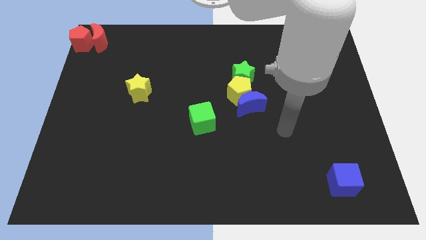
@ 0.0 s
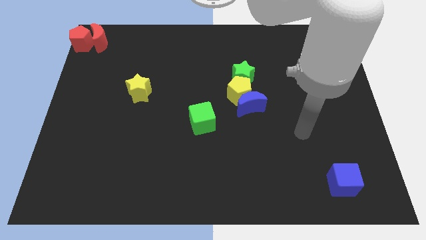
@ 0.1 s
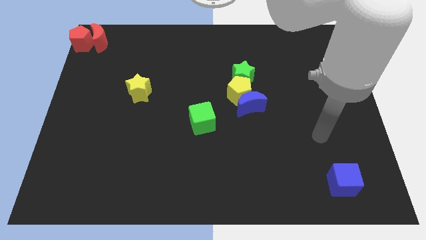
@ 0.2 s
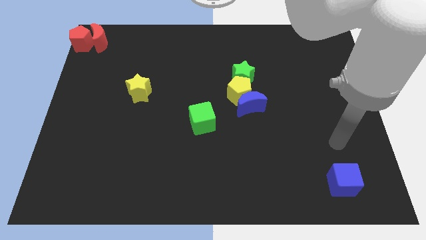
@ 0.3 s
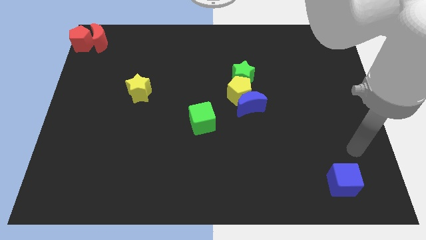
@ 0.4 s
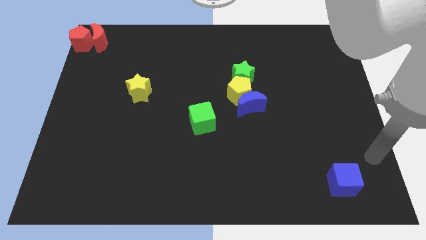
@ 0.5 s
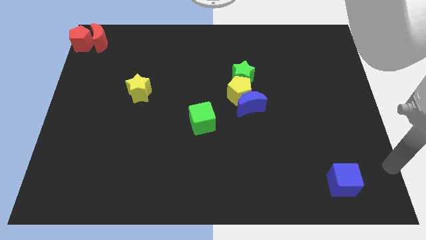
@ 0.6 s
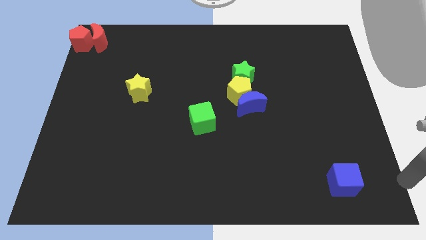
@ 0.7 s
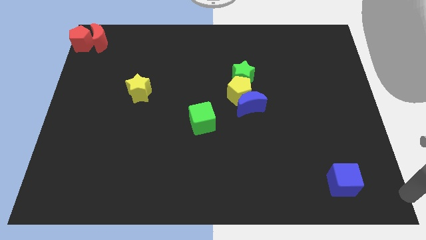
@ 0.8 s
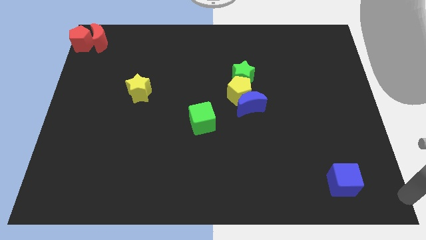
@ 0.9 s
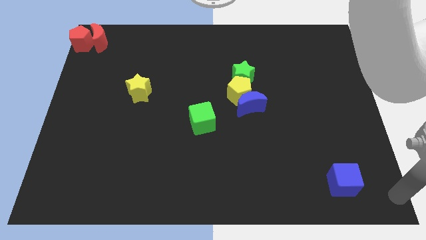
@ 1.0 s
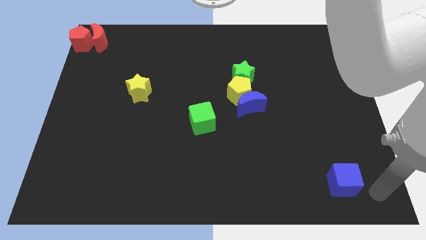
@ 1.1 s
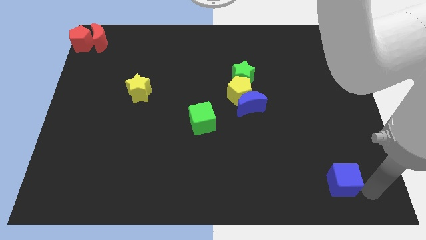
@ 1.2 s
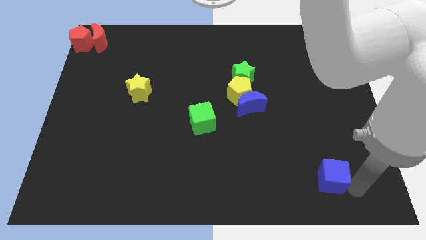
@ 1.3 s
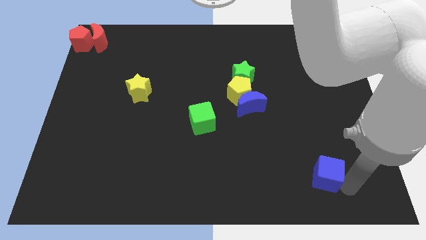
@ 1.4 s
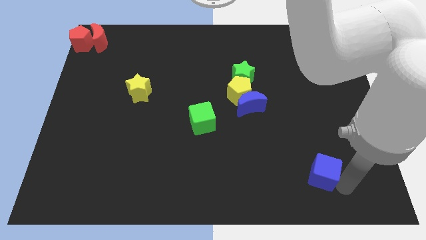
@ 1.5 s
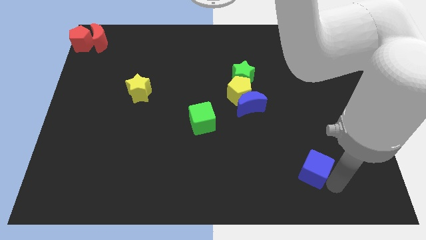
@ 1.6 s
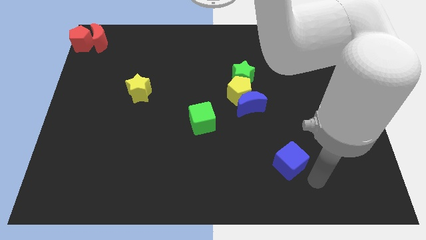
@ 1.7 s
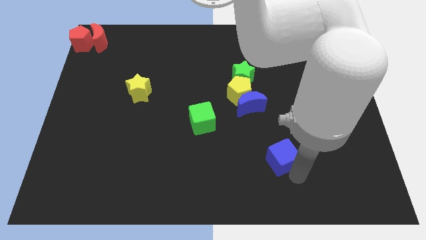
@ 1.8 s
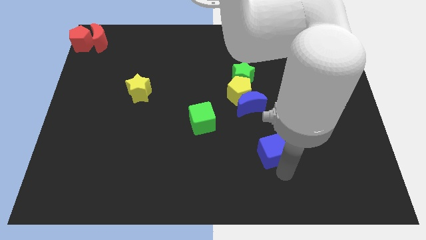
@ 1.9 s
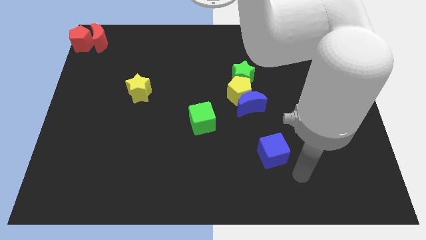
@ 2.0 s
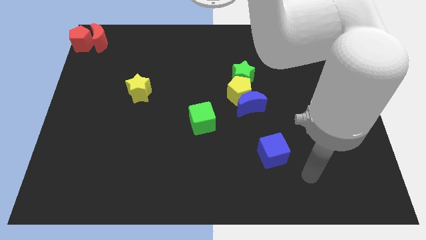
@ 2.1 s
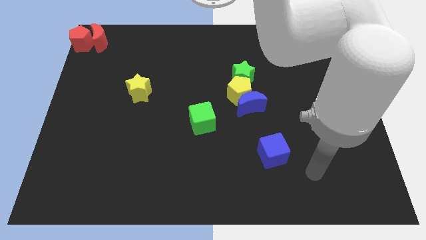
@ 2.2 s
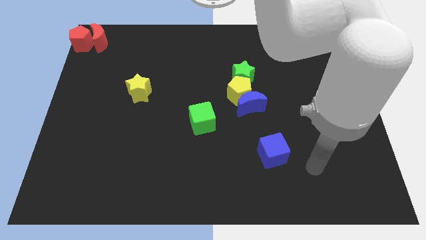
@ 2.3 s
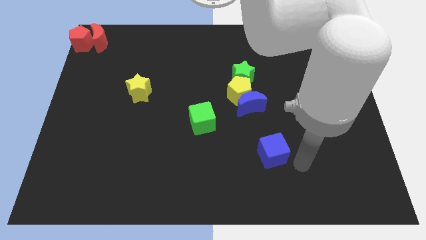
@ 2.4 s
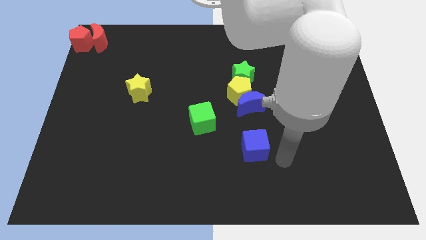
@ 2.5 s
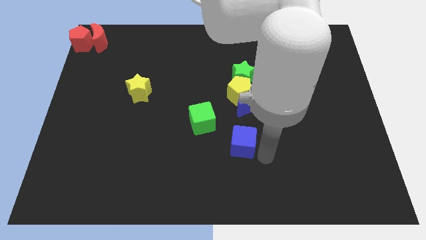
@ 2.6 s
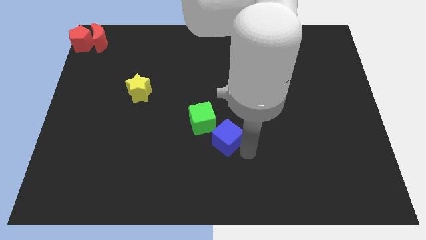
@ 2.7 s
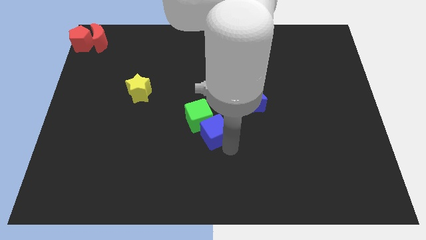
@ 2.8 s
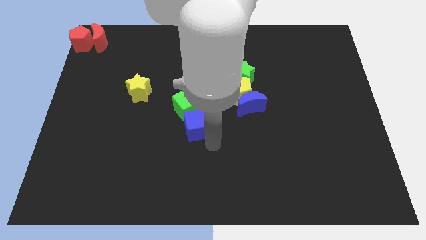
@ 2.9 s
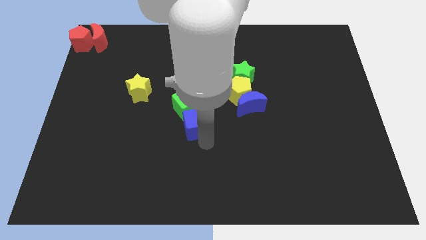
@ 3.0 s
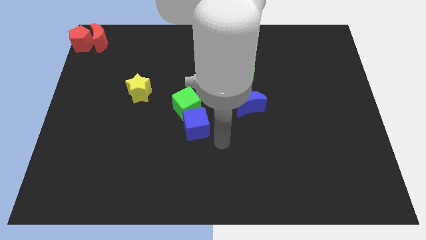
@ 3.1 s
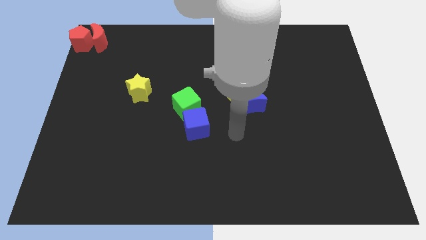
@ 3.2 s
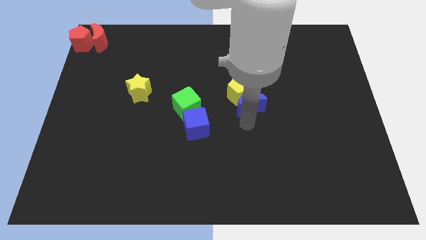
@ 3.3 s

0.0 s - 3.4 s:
place blue cube to the bottom of green cube

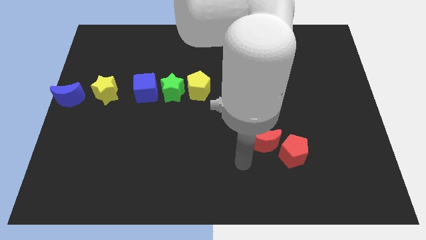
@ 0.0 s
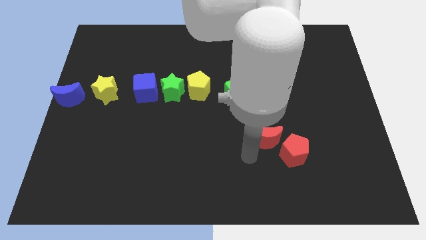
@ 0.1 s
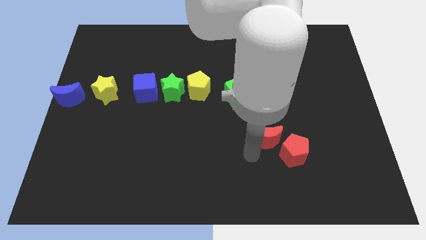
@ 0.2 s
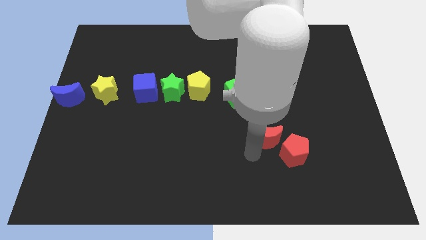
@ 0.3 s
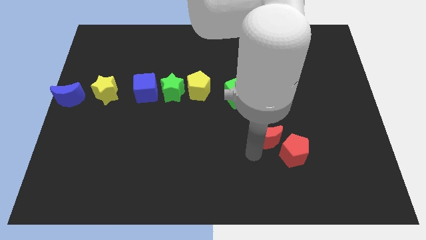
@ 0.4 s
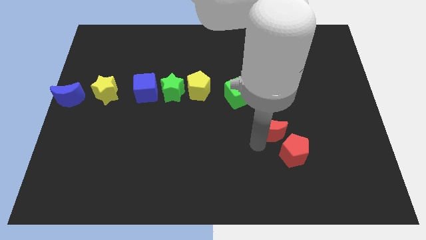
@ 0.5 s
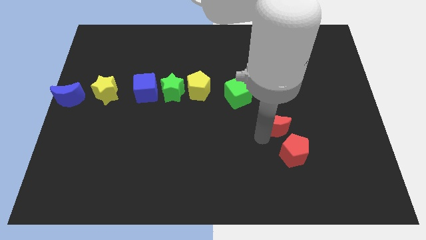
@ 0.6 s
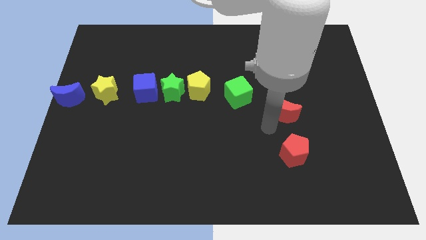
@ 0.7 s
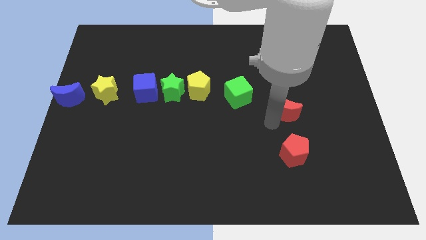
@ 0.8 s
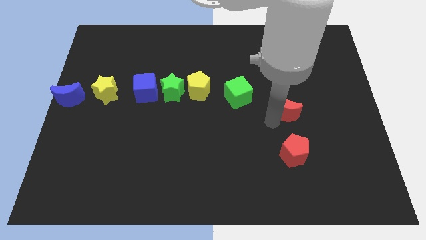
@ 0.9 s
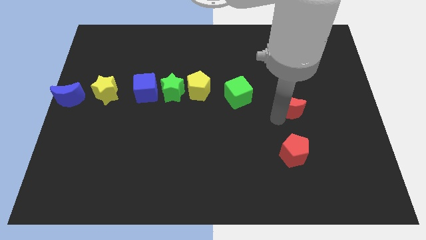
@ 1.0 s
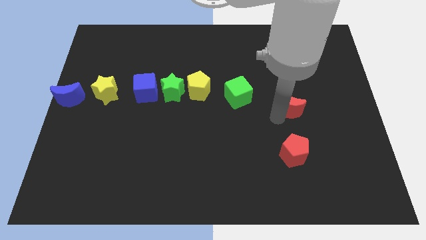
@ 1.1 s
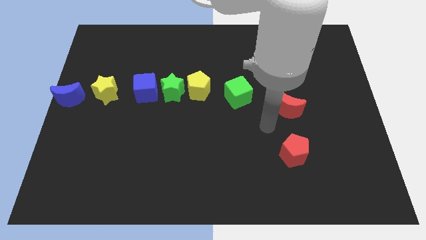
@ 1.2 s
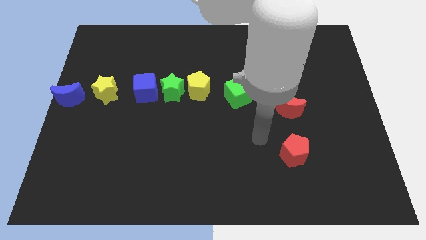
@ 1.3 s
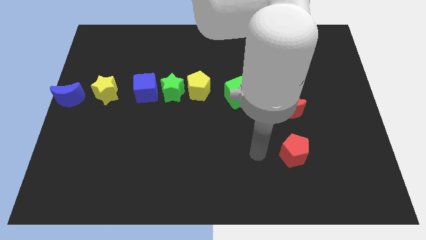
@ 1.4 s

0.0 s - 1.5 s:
push the red moon vertically above the red pentagon

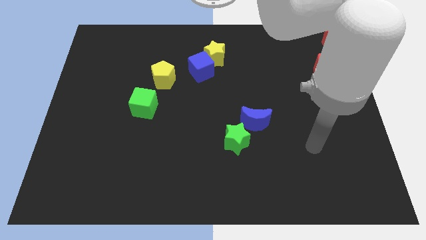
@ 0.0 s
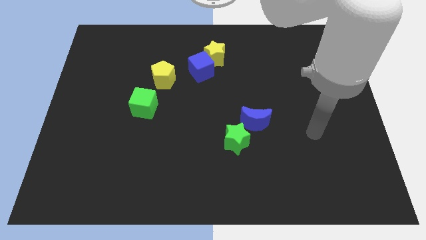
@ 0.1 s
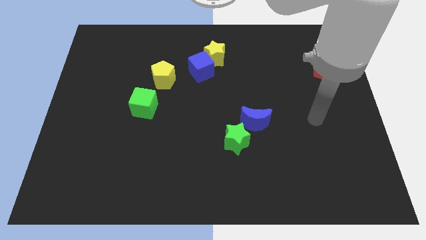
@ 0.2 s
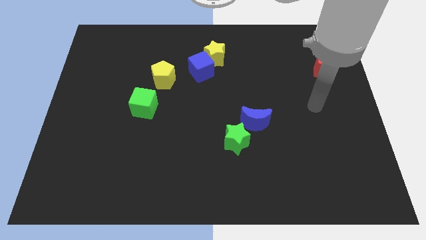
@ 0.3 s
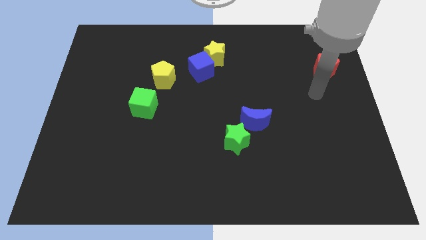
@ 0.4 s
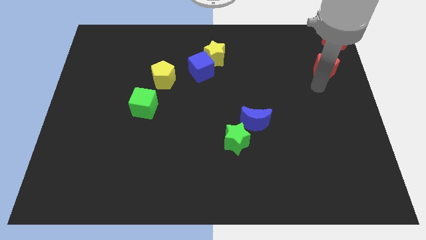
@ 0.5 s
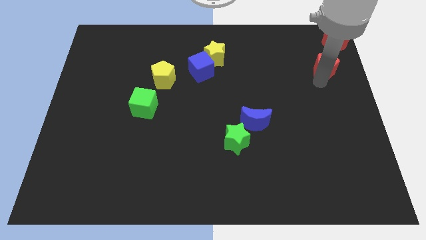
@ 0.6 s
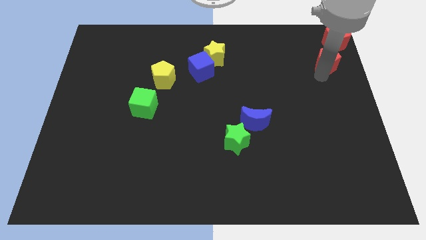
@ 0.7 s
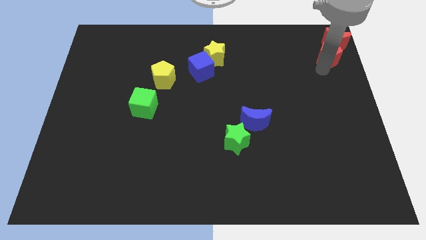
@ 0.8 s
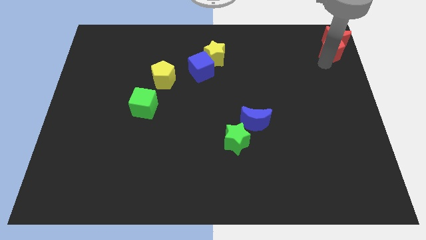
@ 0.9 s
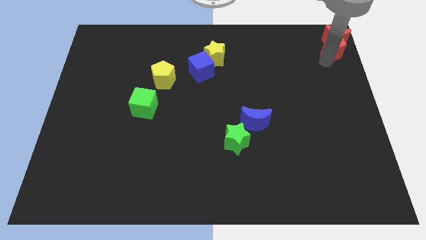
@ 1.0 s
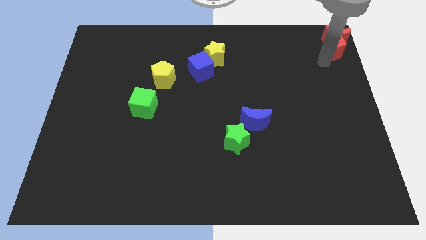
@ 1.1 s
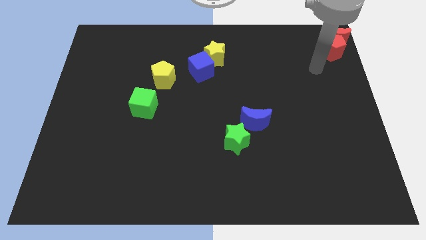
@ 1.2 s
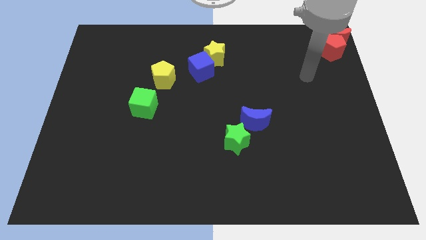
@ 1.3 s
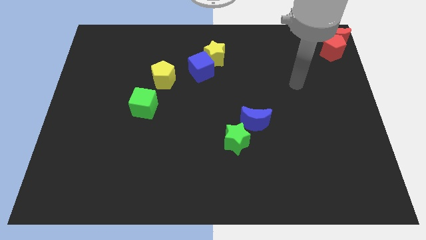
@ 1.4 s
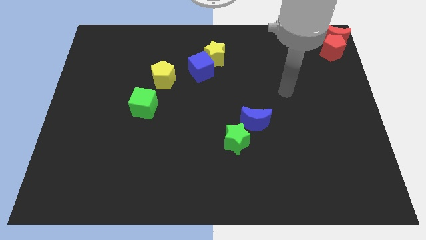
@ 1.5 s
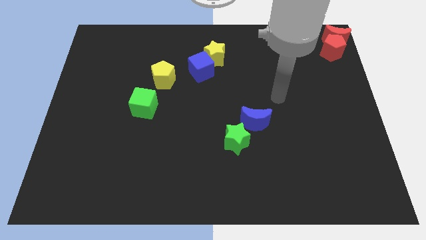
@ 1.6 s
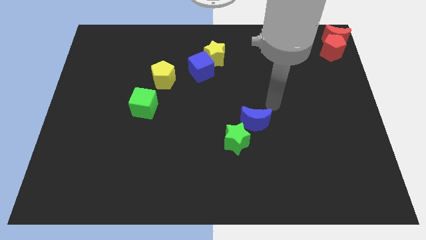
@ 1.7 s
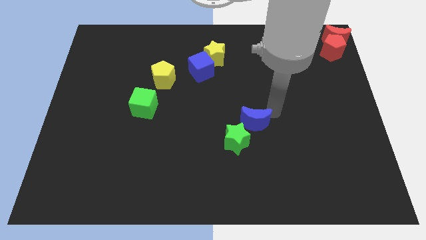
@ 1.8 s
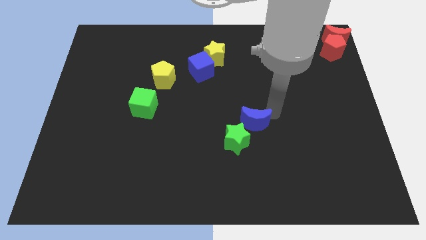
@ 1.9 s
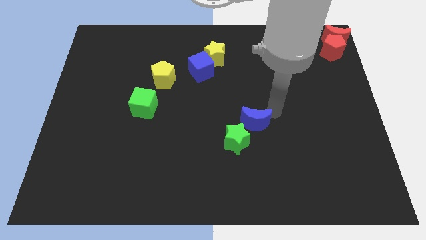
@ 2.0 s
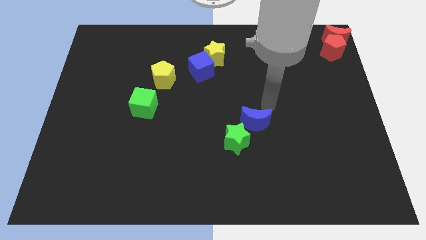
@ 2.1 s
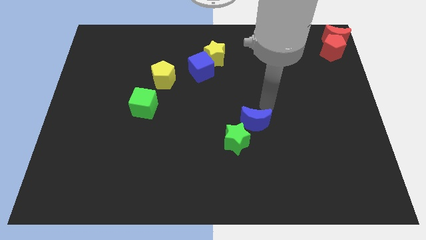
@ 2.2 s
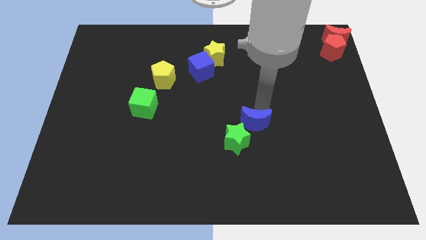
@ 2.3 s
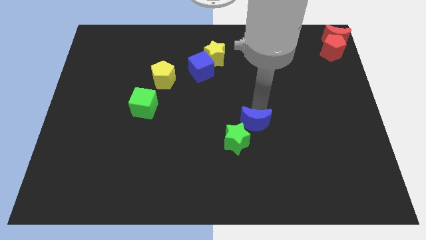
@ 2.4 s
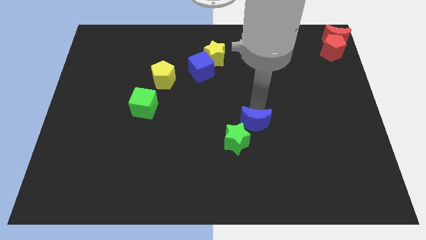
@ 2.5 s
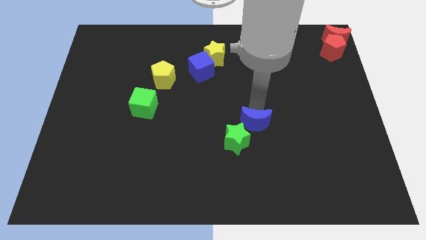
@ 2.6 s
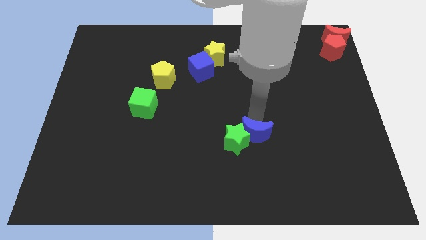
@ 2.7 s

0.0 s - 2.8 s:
move the arm around the blue moon

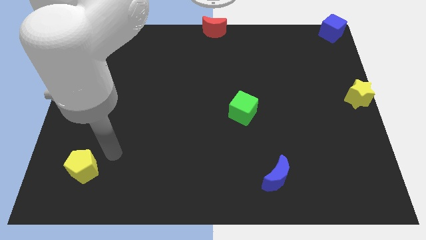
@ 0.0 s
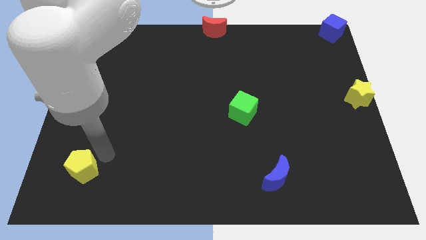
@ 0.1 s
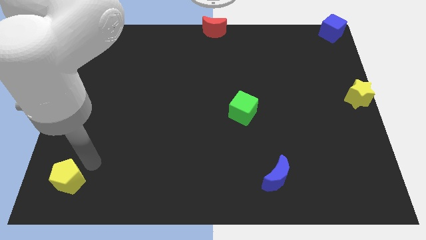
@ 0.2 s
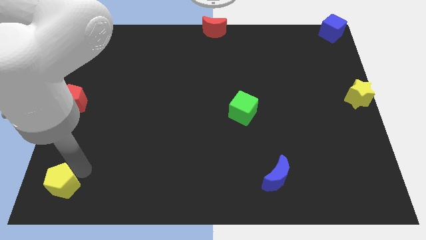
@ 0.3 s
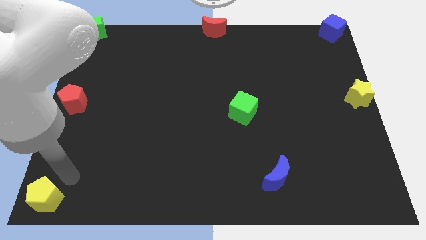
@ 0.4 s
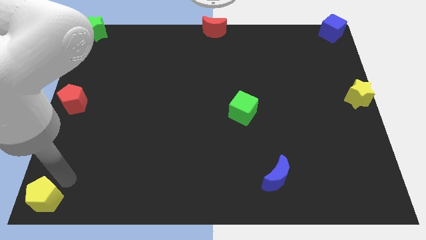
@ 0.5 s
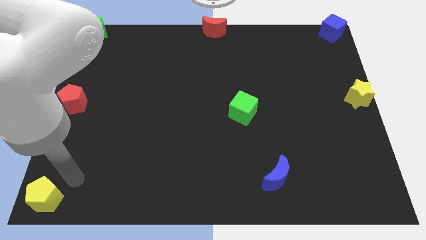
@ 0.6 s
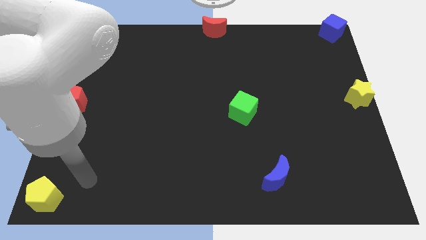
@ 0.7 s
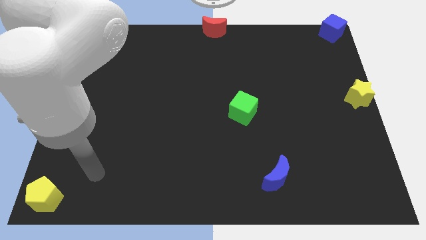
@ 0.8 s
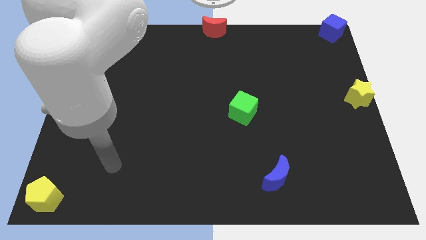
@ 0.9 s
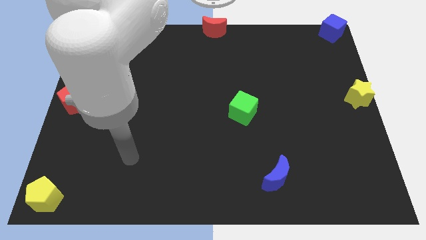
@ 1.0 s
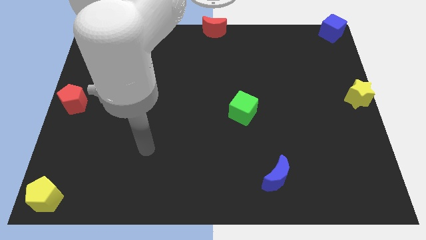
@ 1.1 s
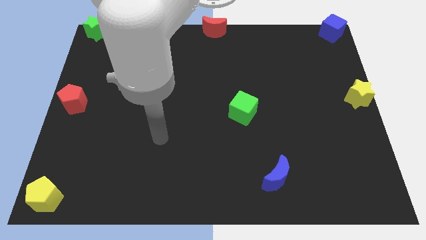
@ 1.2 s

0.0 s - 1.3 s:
move the yellow pentagon at the bottom left corner

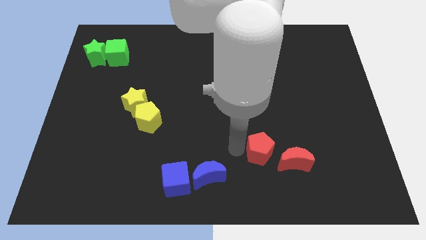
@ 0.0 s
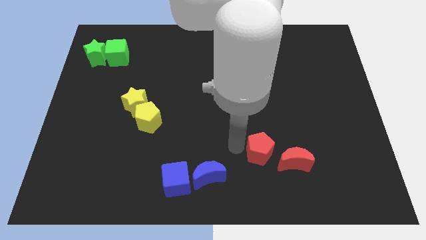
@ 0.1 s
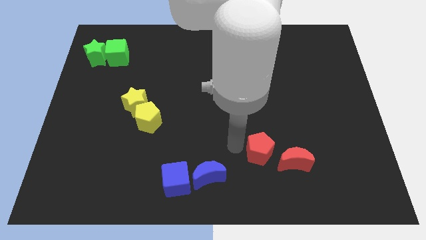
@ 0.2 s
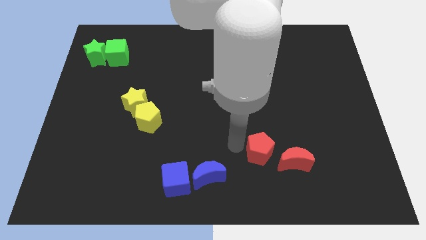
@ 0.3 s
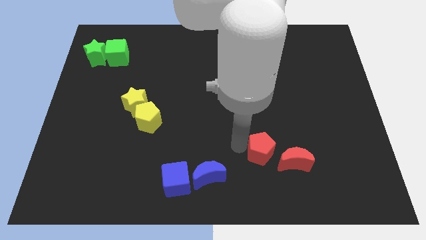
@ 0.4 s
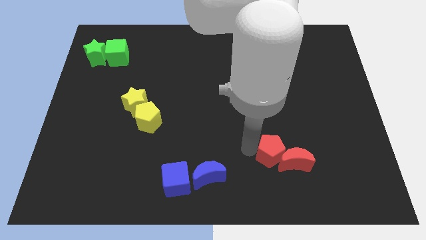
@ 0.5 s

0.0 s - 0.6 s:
push the red pentagon close to the red crescent
